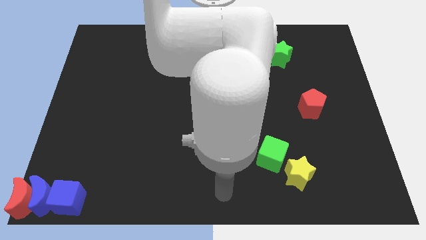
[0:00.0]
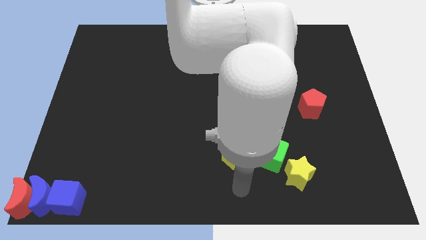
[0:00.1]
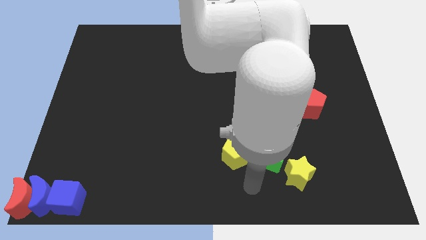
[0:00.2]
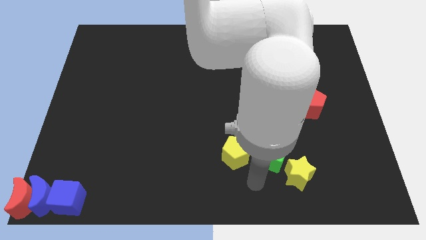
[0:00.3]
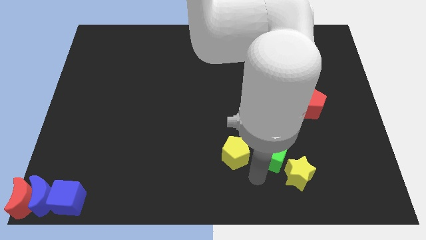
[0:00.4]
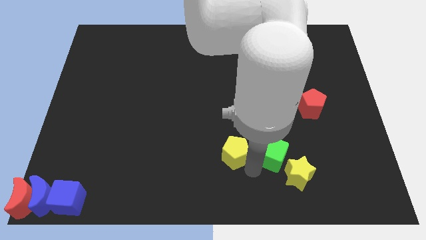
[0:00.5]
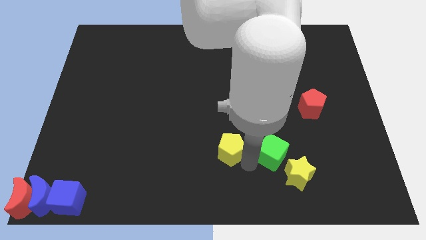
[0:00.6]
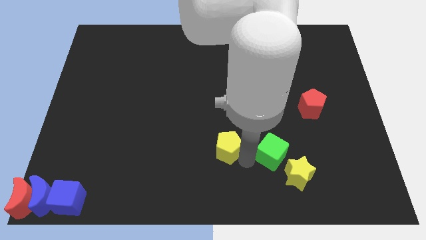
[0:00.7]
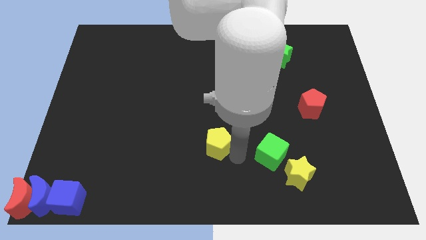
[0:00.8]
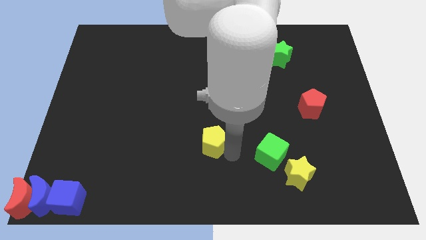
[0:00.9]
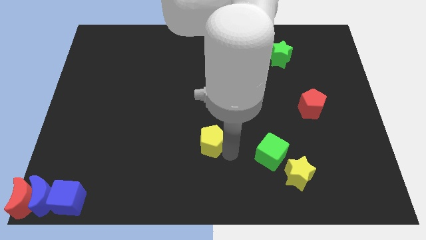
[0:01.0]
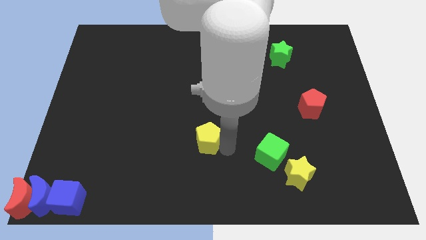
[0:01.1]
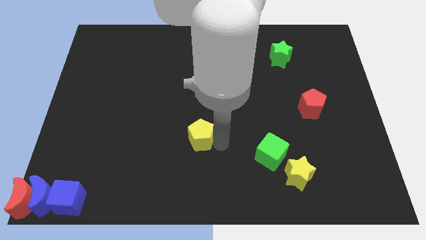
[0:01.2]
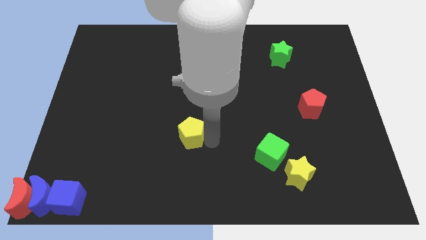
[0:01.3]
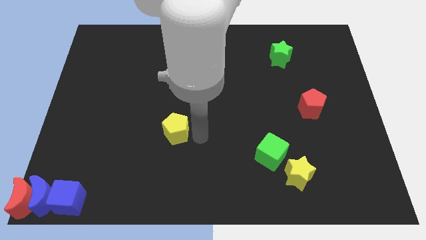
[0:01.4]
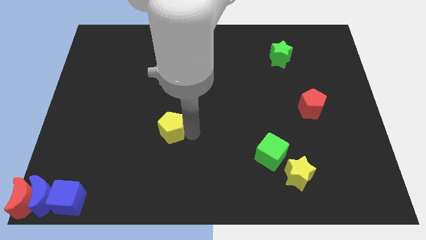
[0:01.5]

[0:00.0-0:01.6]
place the yellow pentagon at the center of the board

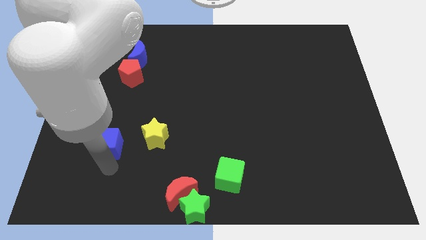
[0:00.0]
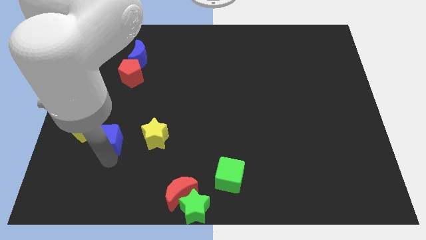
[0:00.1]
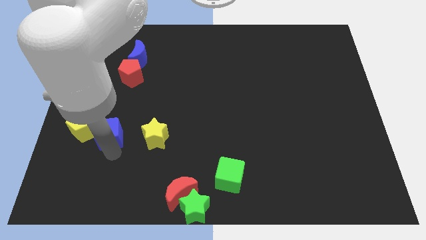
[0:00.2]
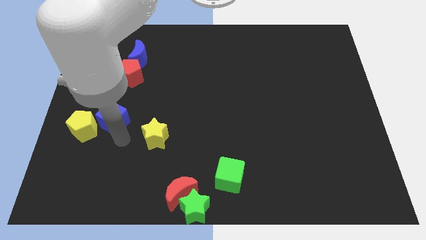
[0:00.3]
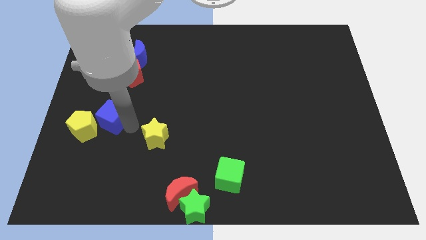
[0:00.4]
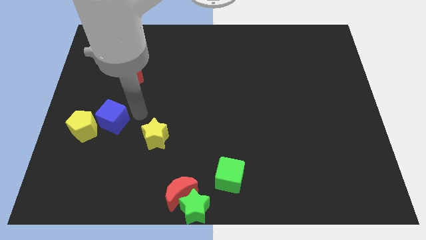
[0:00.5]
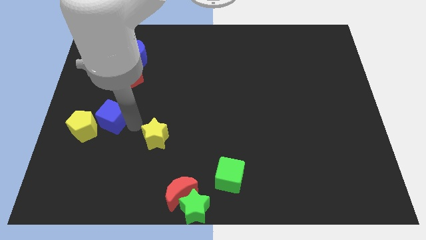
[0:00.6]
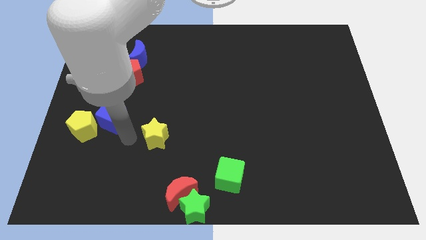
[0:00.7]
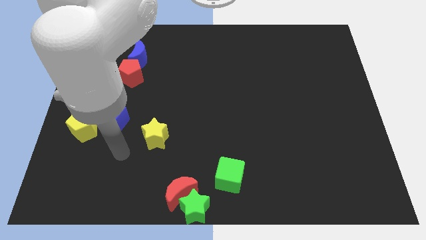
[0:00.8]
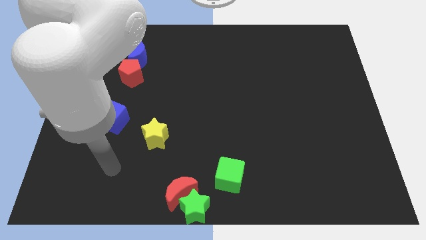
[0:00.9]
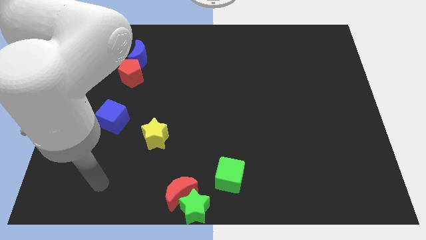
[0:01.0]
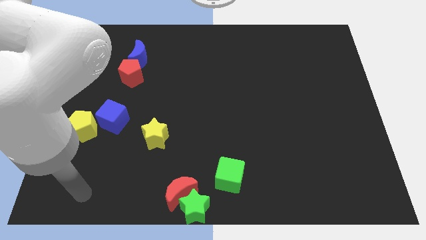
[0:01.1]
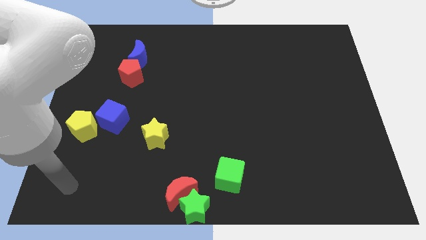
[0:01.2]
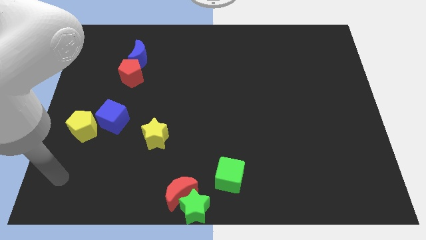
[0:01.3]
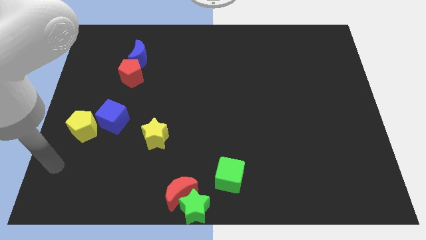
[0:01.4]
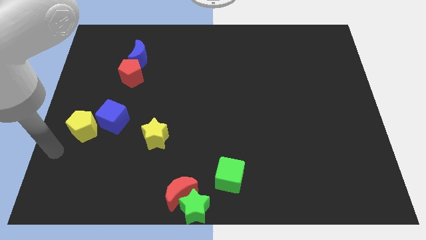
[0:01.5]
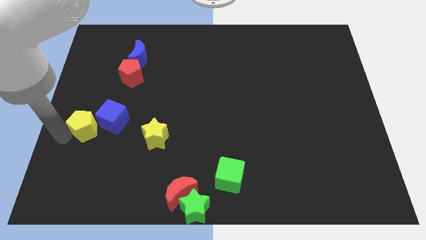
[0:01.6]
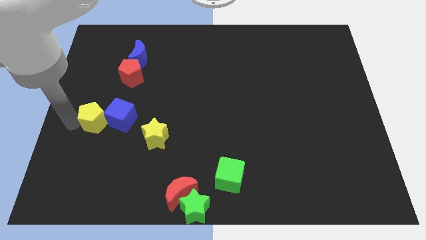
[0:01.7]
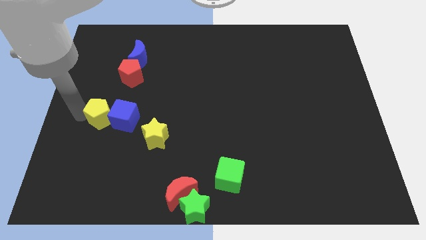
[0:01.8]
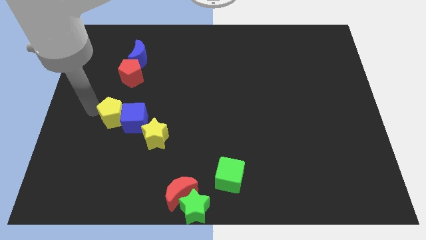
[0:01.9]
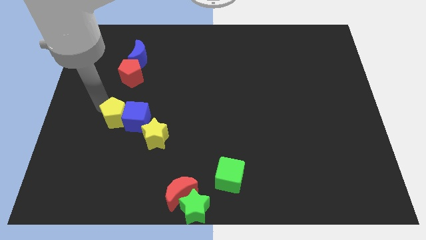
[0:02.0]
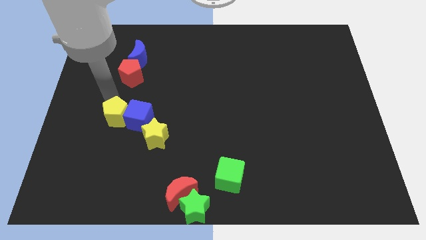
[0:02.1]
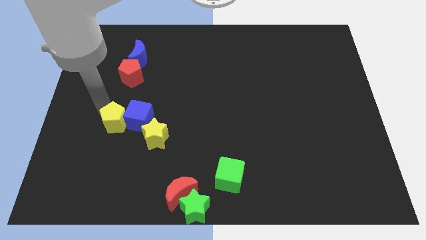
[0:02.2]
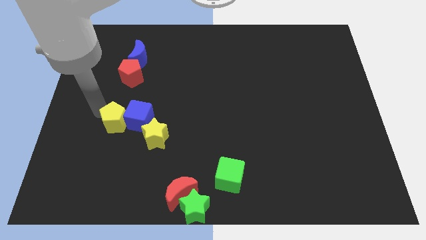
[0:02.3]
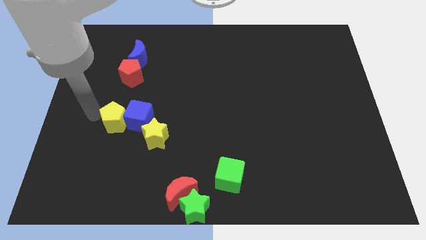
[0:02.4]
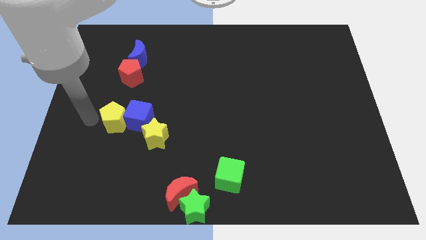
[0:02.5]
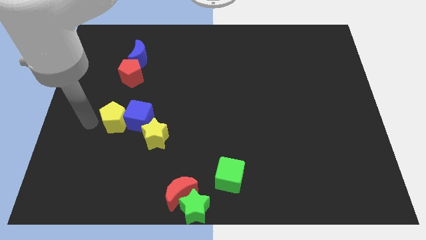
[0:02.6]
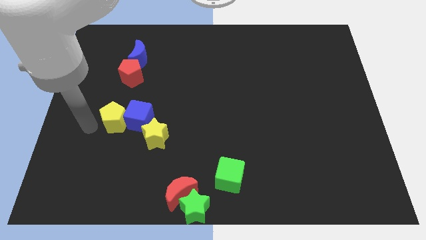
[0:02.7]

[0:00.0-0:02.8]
make the yellow pentagon to touch the blue cube

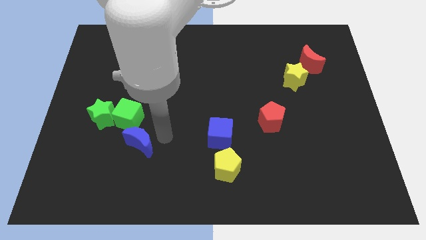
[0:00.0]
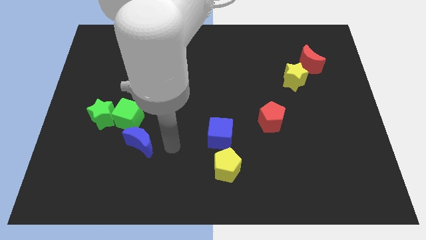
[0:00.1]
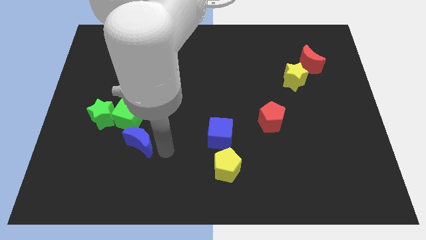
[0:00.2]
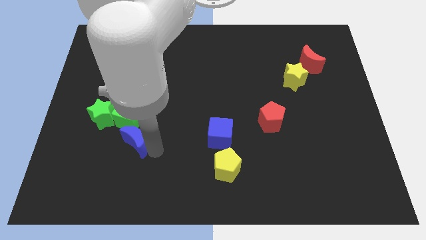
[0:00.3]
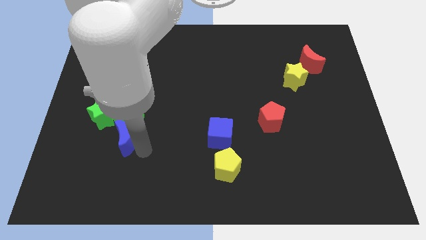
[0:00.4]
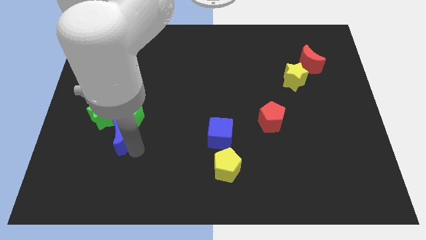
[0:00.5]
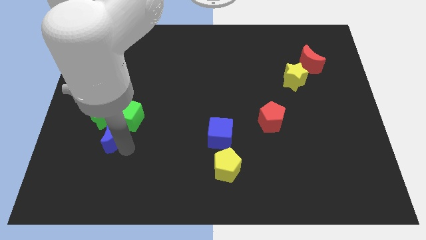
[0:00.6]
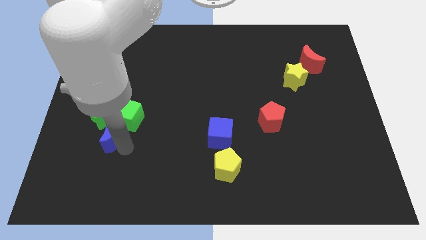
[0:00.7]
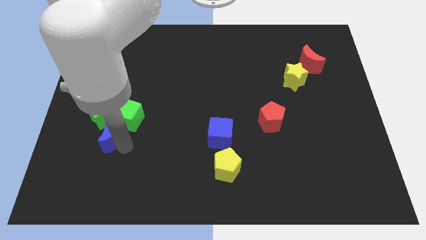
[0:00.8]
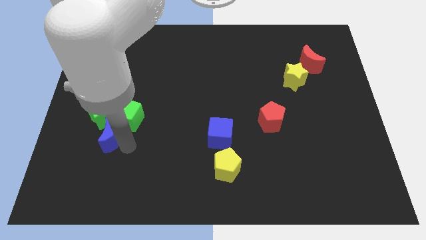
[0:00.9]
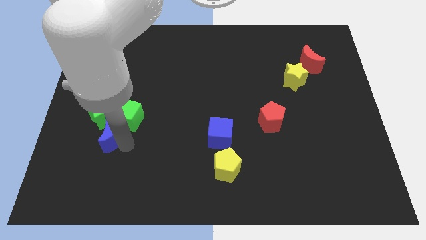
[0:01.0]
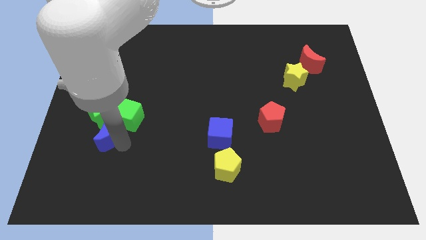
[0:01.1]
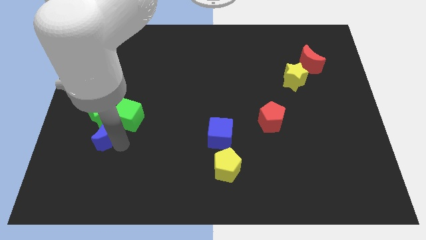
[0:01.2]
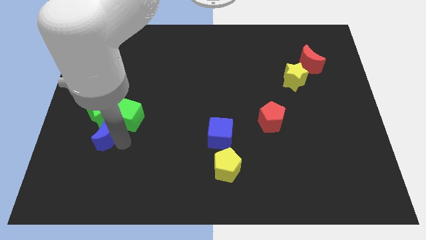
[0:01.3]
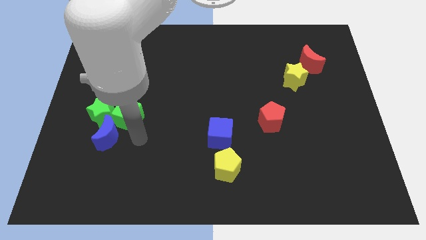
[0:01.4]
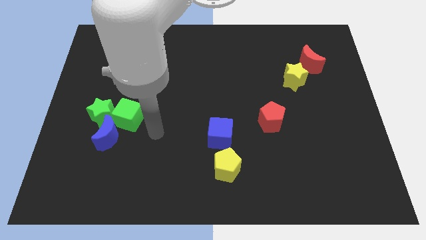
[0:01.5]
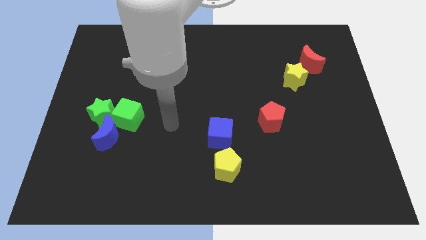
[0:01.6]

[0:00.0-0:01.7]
push the blue moon into the green blocks

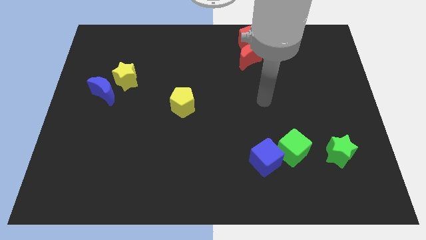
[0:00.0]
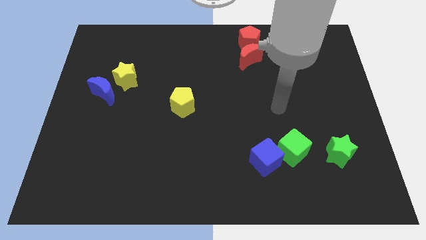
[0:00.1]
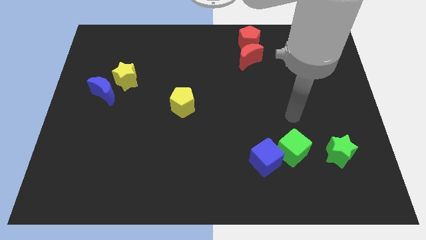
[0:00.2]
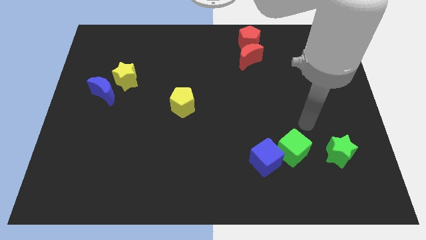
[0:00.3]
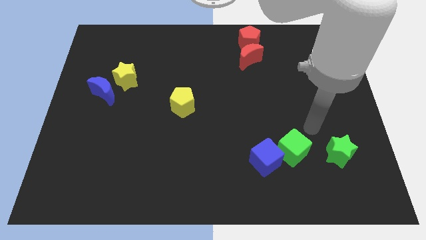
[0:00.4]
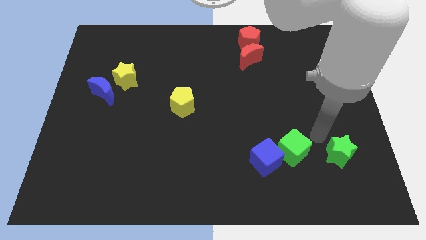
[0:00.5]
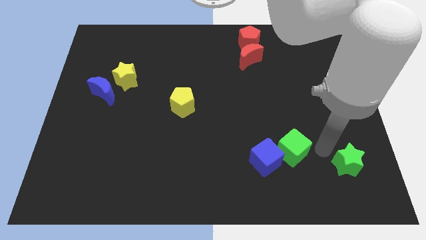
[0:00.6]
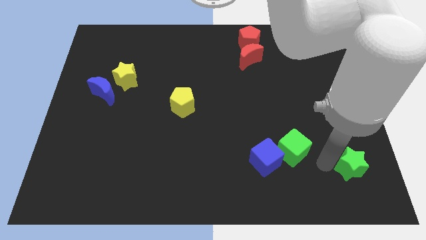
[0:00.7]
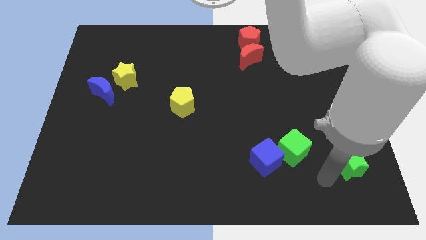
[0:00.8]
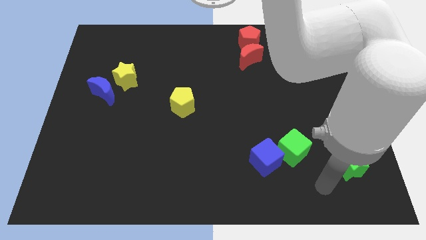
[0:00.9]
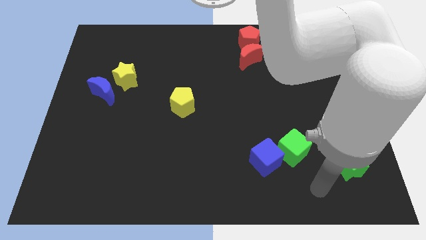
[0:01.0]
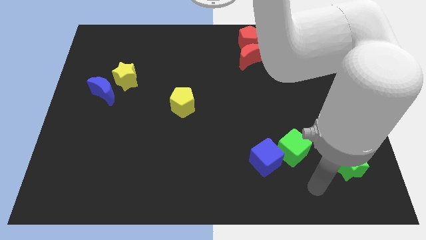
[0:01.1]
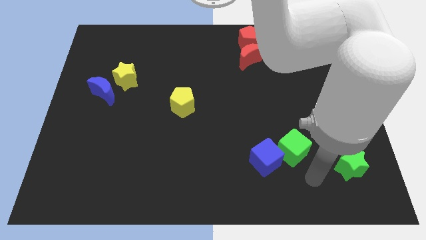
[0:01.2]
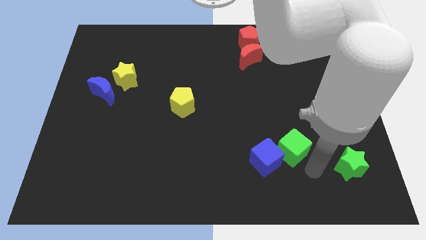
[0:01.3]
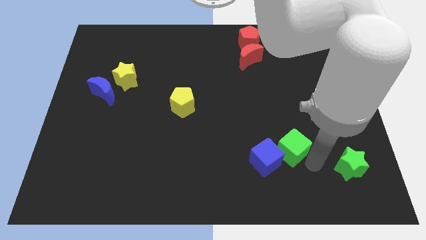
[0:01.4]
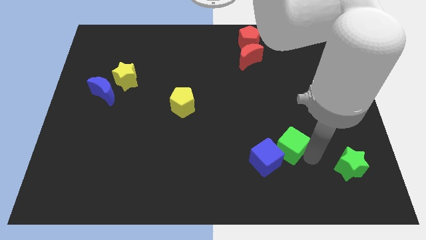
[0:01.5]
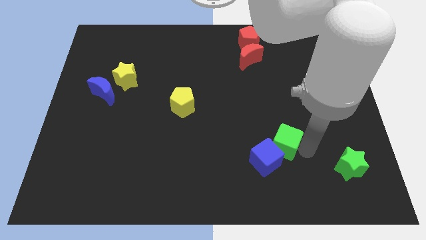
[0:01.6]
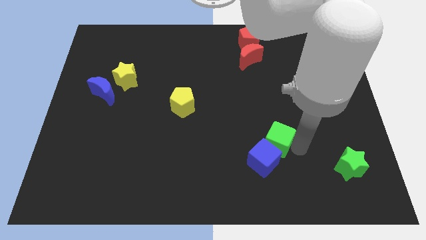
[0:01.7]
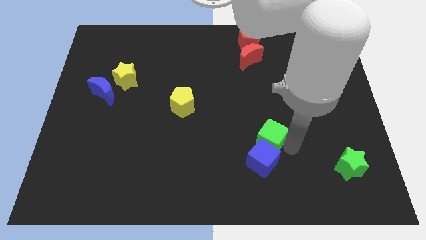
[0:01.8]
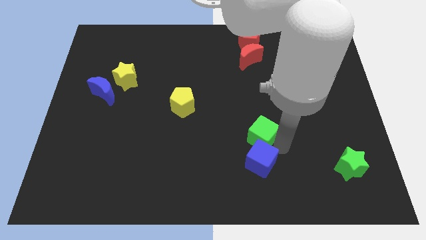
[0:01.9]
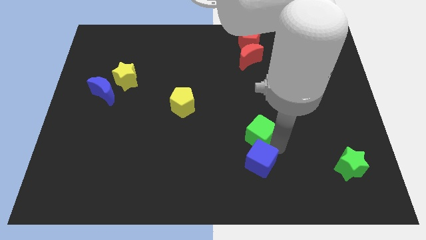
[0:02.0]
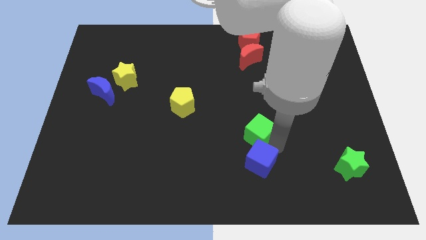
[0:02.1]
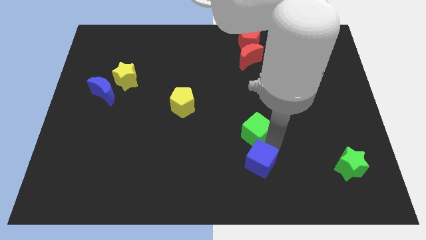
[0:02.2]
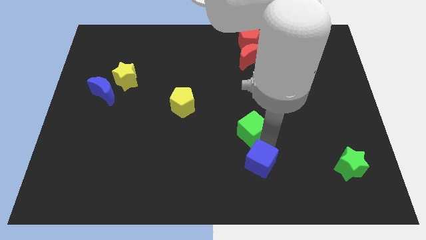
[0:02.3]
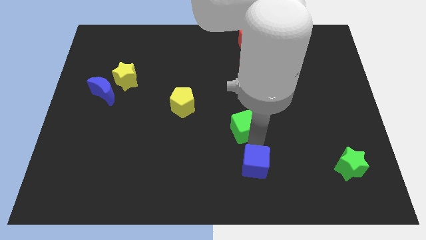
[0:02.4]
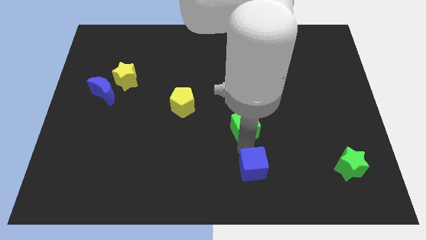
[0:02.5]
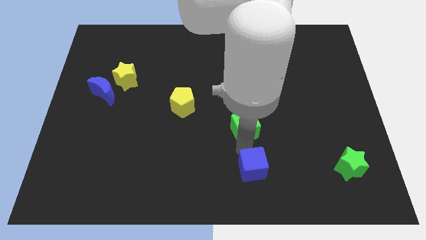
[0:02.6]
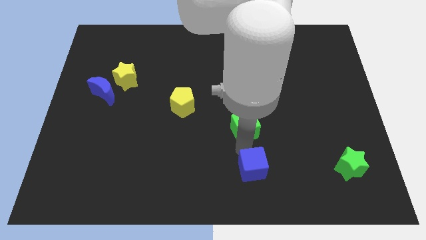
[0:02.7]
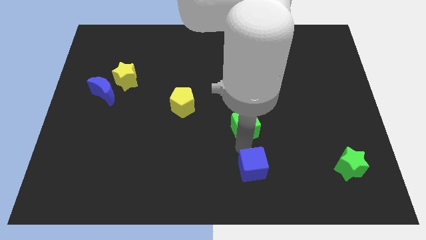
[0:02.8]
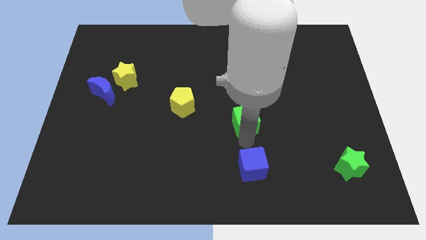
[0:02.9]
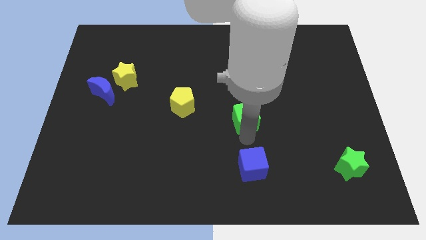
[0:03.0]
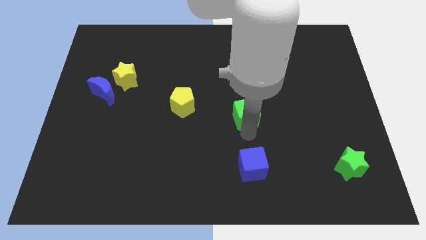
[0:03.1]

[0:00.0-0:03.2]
separate blue cube from the green cube
